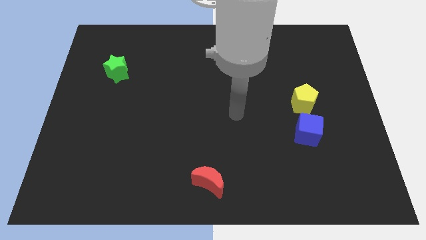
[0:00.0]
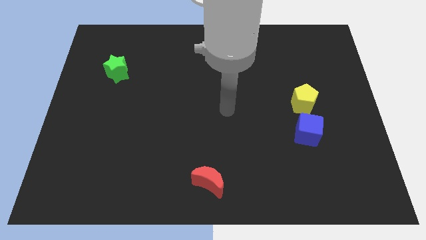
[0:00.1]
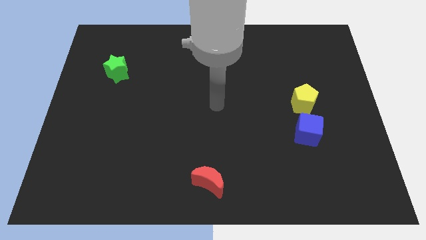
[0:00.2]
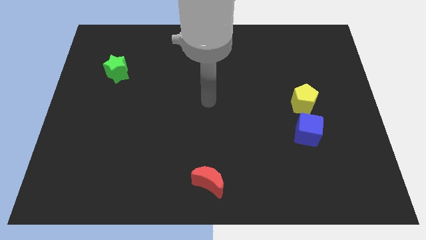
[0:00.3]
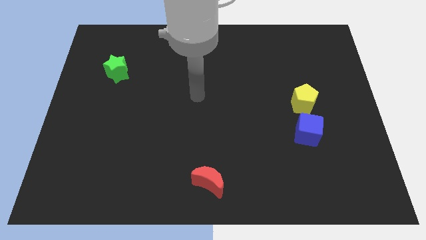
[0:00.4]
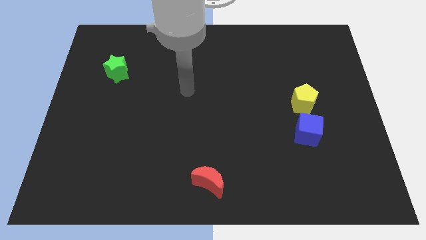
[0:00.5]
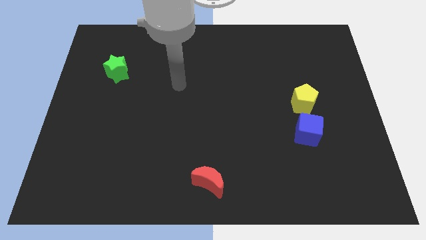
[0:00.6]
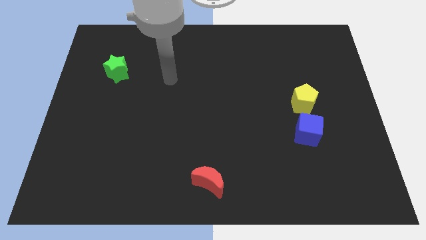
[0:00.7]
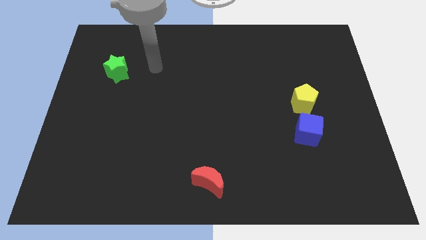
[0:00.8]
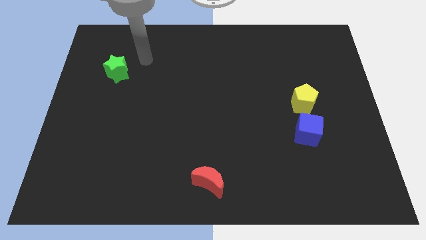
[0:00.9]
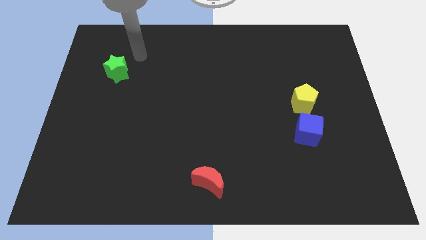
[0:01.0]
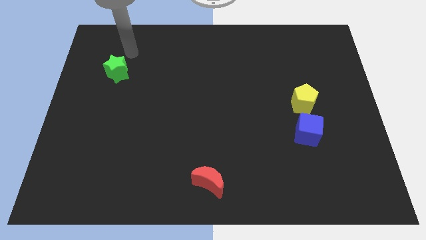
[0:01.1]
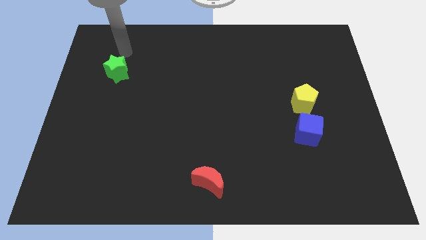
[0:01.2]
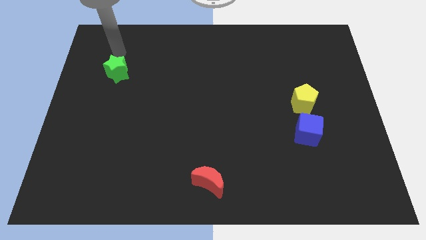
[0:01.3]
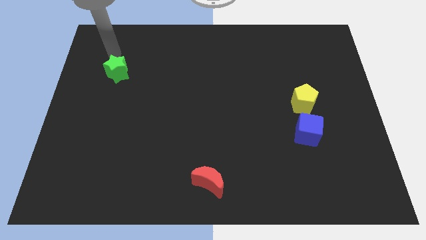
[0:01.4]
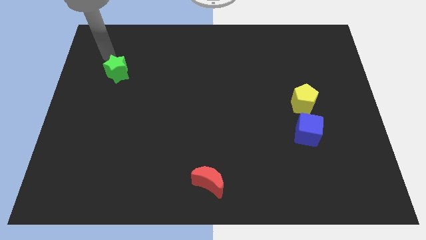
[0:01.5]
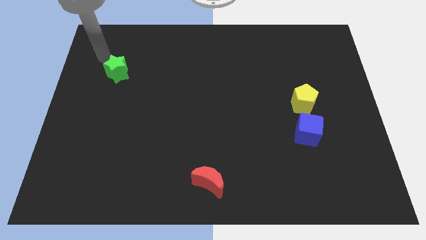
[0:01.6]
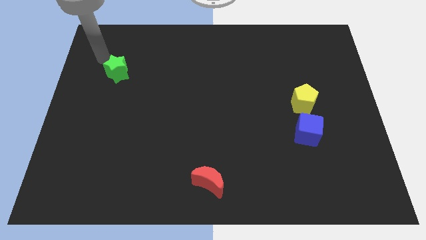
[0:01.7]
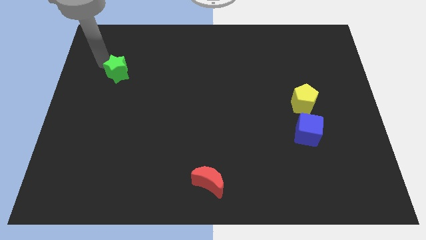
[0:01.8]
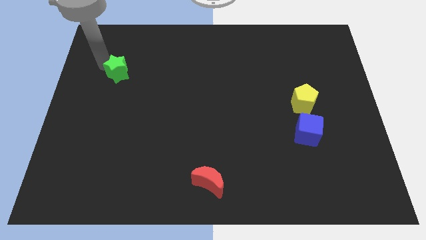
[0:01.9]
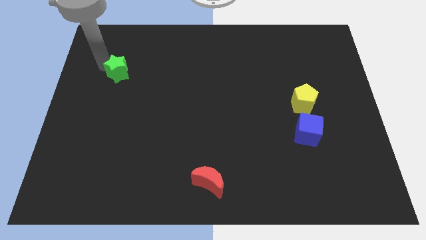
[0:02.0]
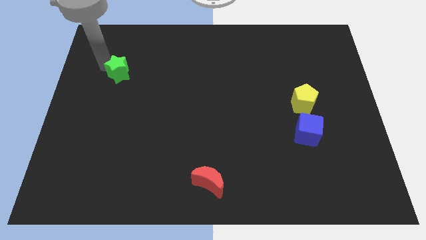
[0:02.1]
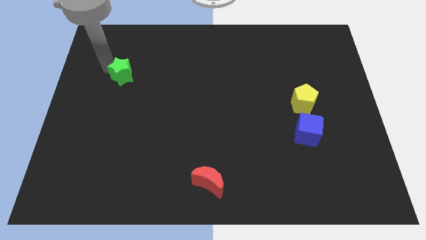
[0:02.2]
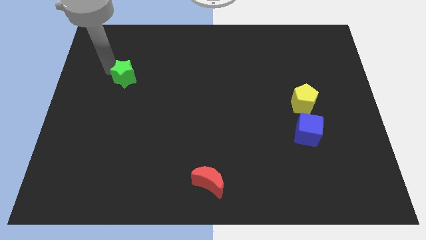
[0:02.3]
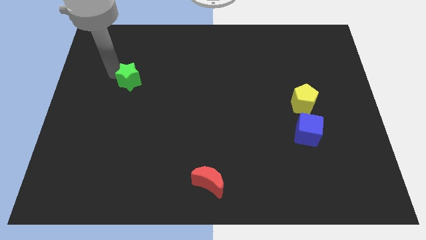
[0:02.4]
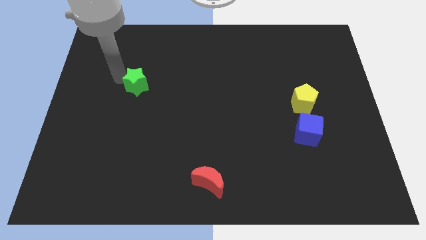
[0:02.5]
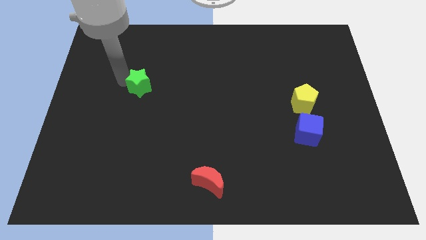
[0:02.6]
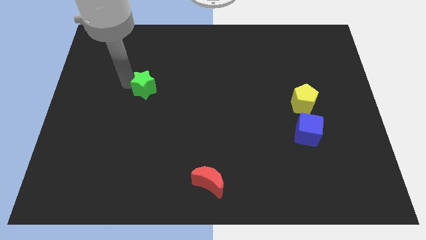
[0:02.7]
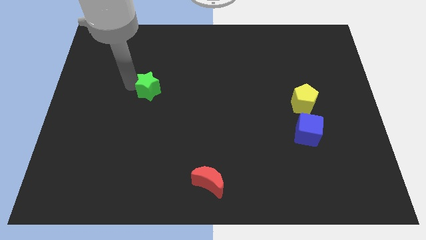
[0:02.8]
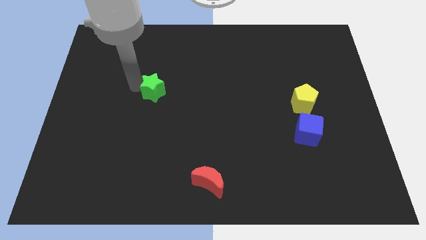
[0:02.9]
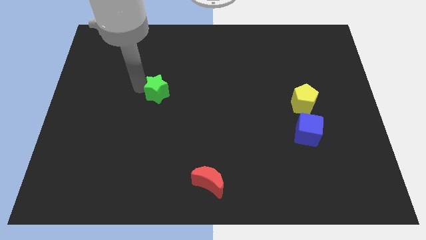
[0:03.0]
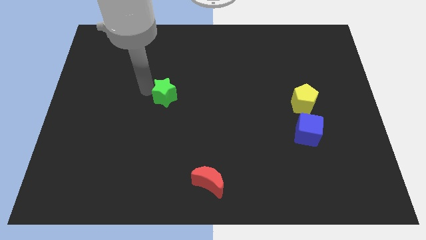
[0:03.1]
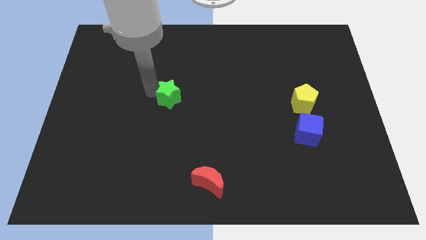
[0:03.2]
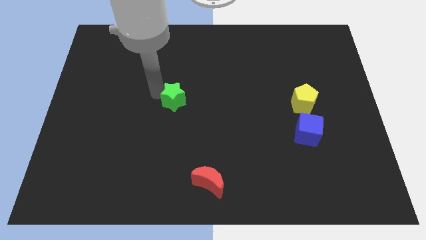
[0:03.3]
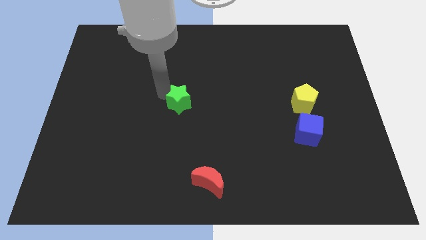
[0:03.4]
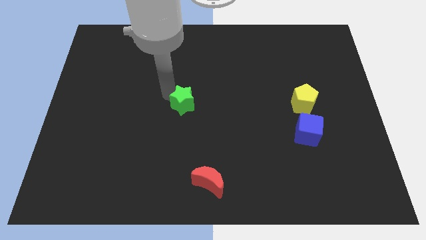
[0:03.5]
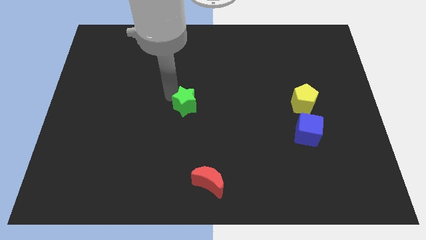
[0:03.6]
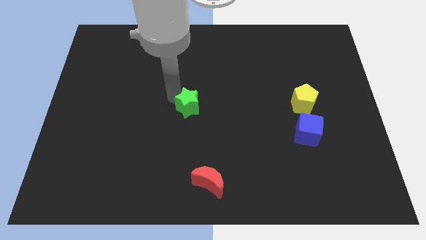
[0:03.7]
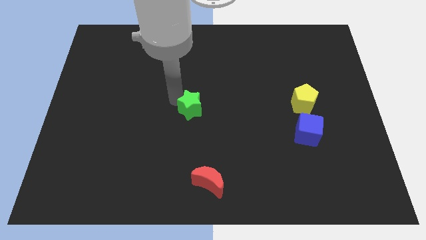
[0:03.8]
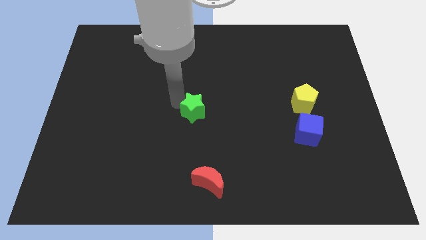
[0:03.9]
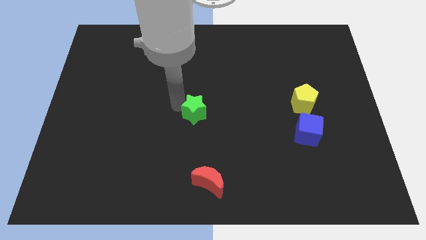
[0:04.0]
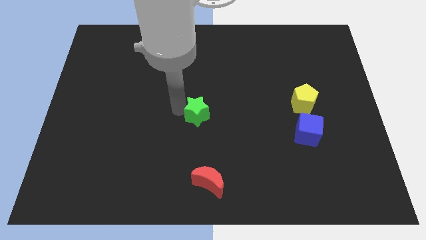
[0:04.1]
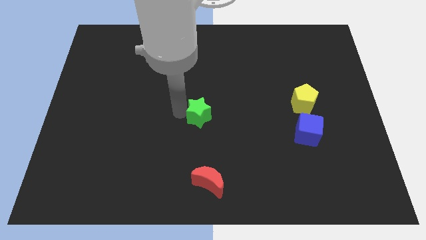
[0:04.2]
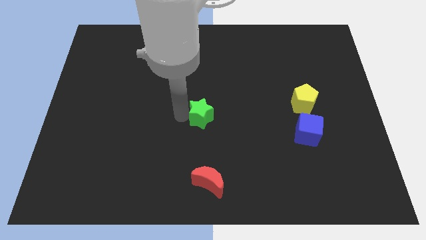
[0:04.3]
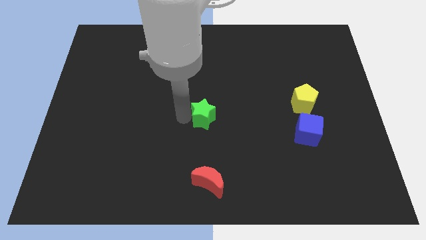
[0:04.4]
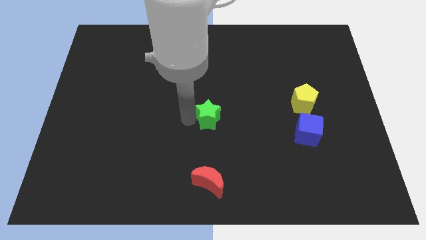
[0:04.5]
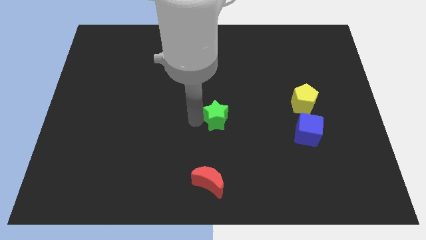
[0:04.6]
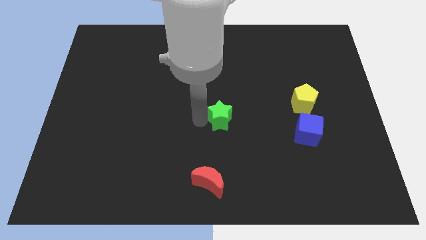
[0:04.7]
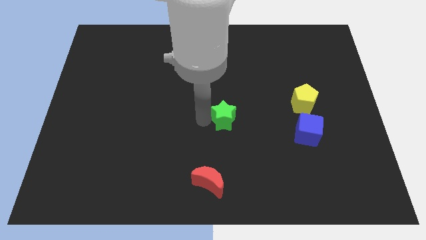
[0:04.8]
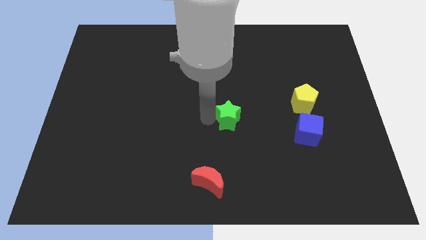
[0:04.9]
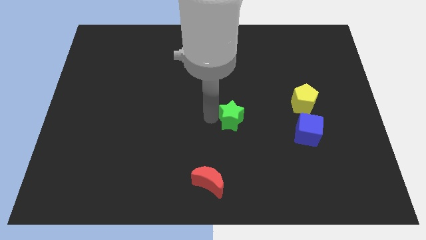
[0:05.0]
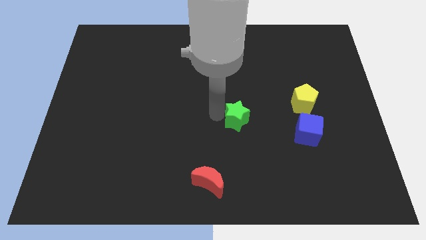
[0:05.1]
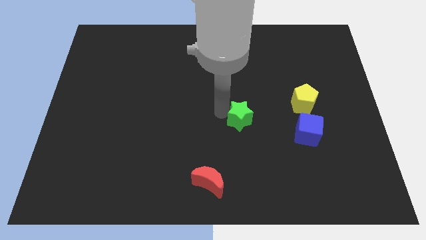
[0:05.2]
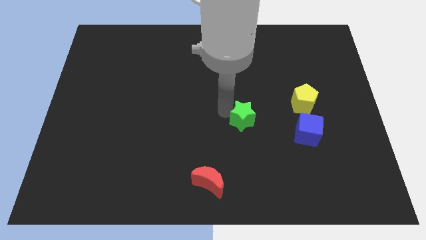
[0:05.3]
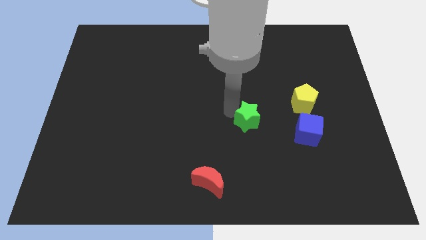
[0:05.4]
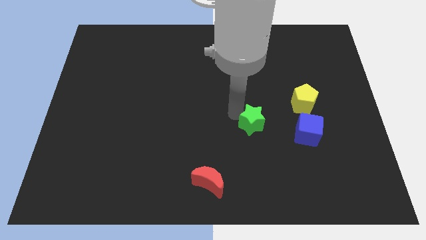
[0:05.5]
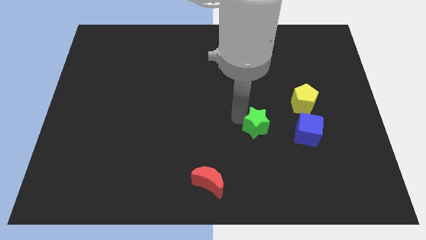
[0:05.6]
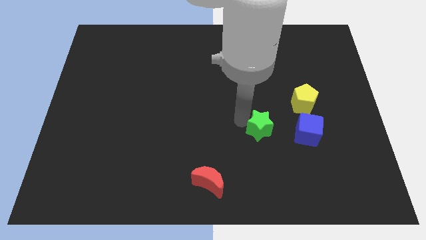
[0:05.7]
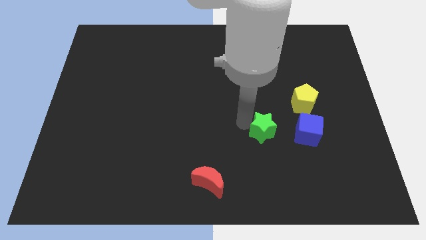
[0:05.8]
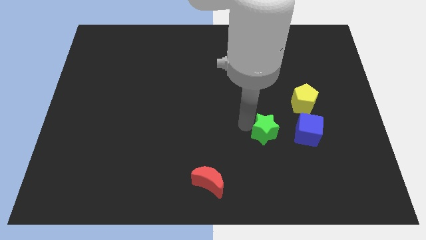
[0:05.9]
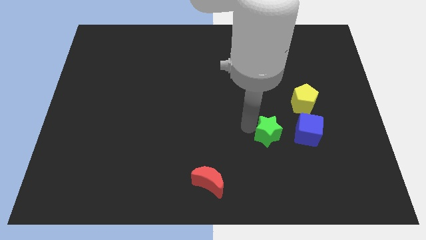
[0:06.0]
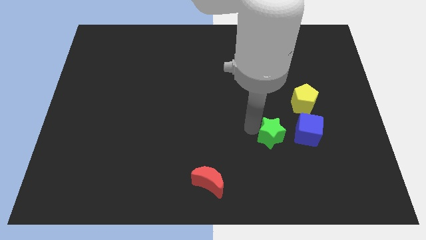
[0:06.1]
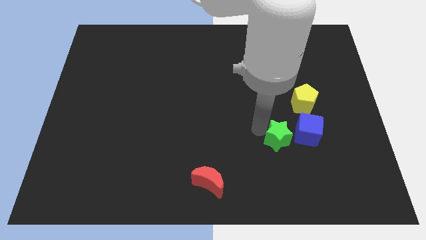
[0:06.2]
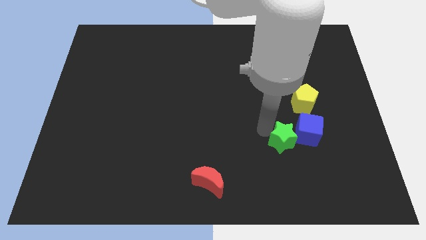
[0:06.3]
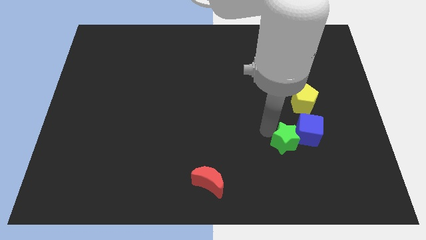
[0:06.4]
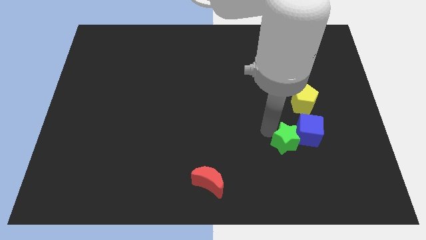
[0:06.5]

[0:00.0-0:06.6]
push the green block next to the blue block

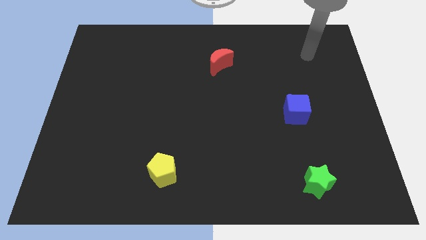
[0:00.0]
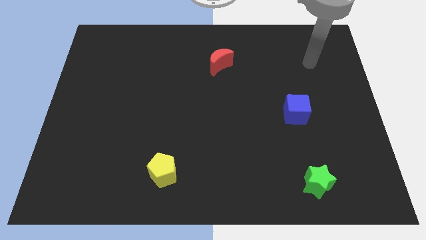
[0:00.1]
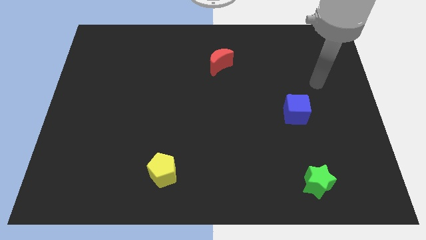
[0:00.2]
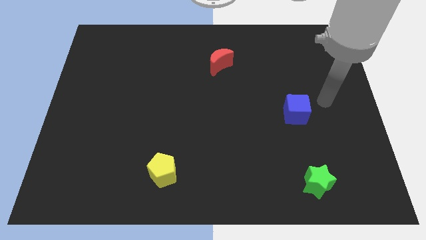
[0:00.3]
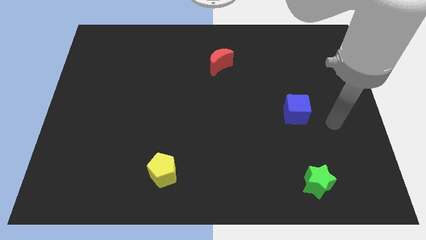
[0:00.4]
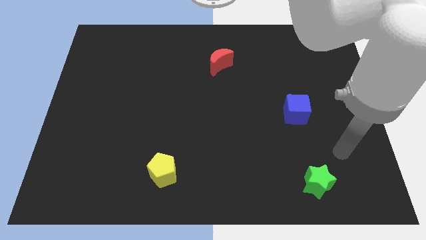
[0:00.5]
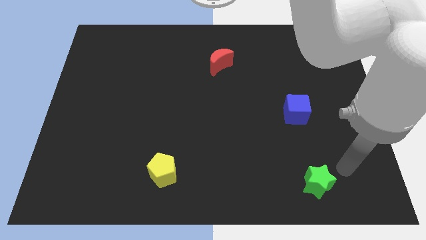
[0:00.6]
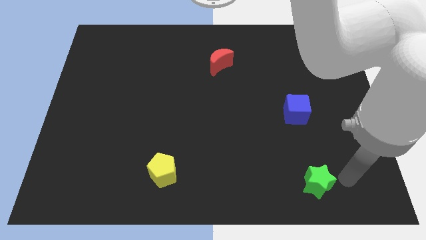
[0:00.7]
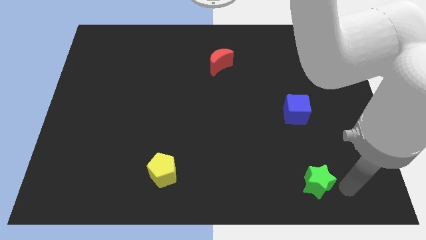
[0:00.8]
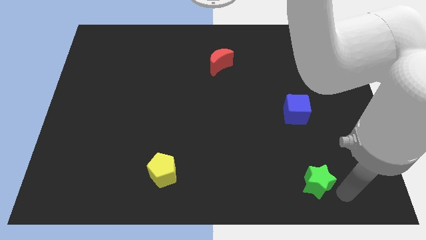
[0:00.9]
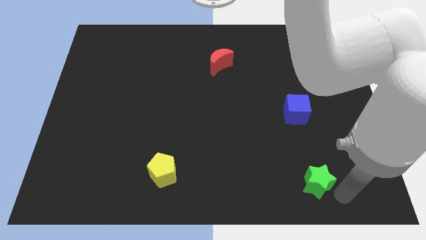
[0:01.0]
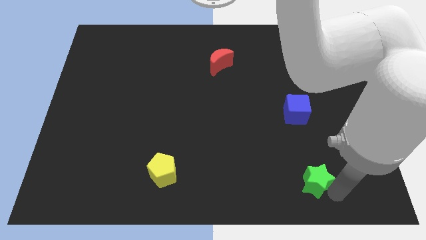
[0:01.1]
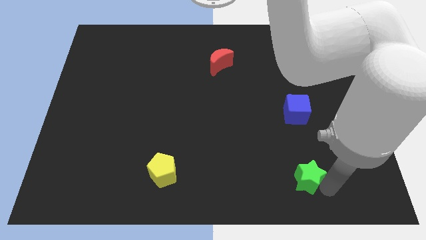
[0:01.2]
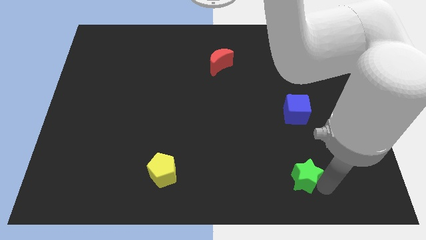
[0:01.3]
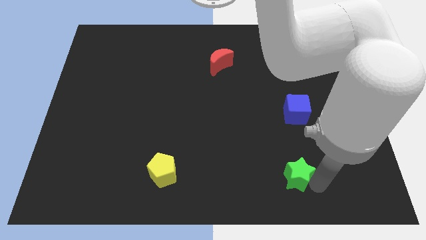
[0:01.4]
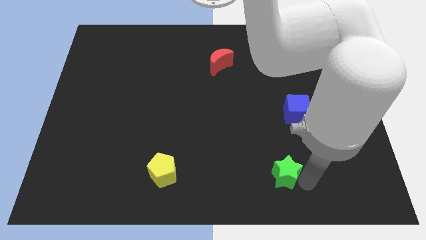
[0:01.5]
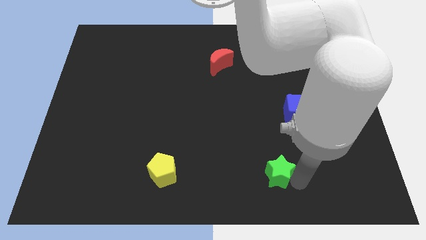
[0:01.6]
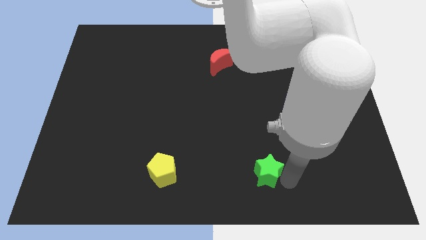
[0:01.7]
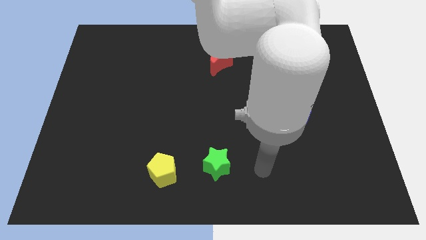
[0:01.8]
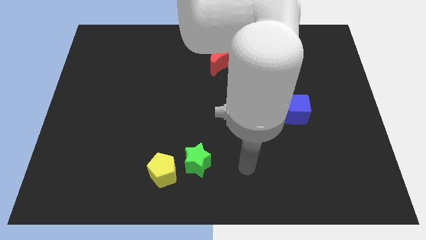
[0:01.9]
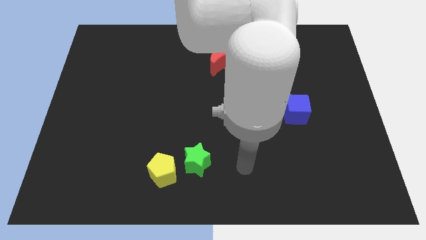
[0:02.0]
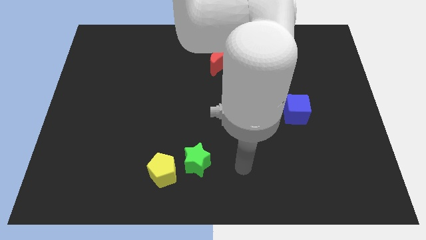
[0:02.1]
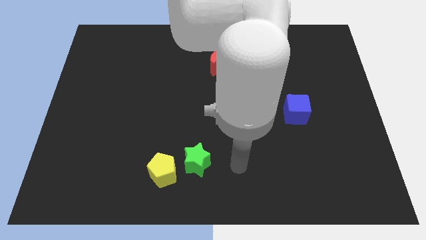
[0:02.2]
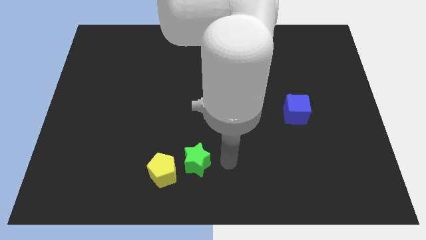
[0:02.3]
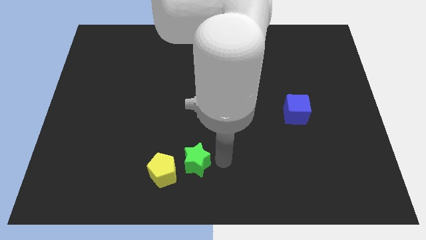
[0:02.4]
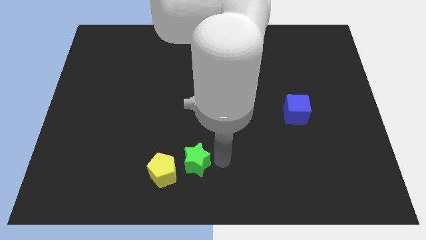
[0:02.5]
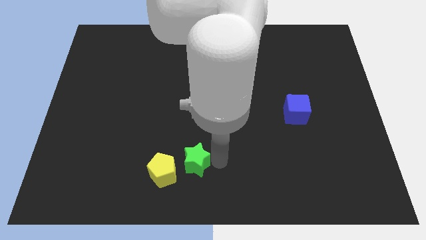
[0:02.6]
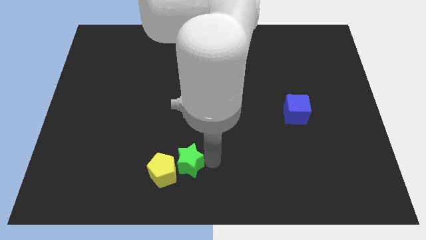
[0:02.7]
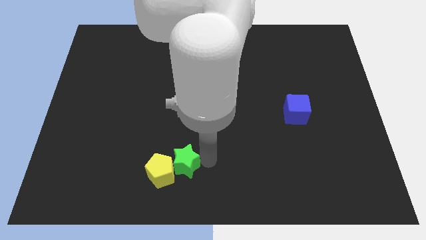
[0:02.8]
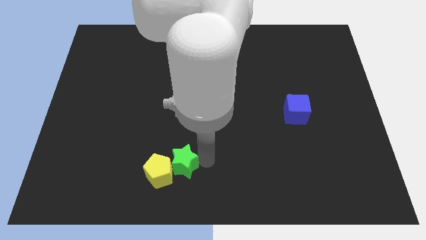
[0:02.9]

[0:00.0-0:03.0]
put the star close to the yellow block
